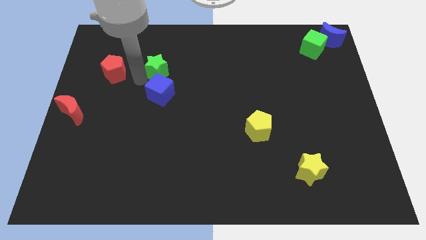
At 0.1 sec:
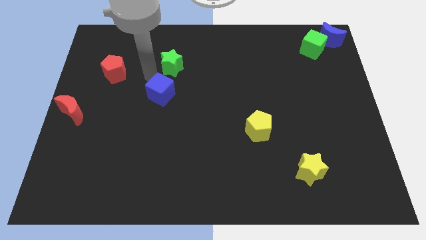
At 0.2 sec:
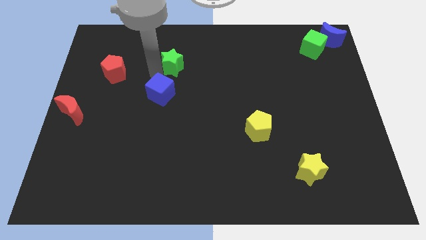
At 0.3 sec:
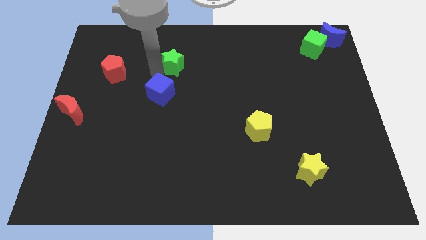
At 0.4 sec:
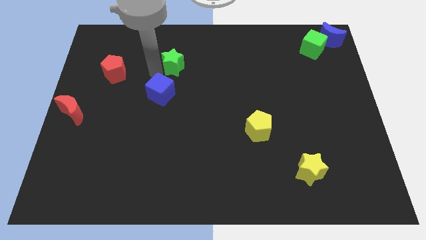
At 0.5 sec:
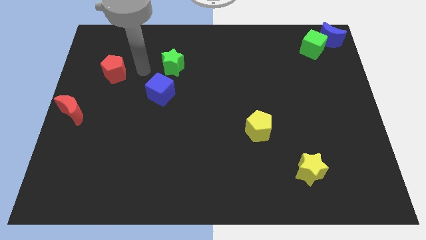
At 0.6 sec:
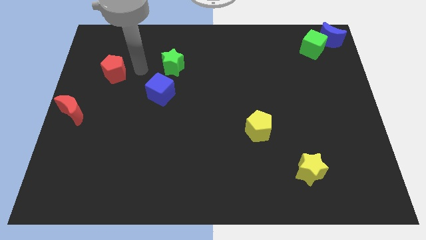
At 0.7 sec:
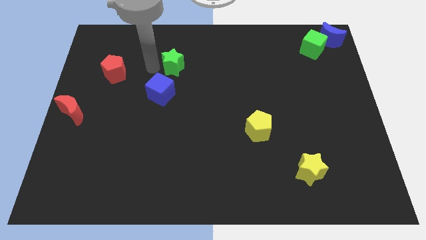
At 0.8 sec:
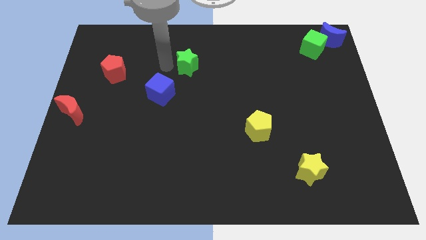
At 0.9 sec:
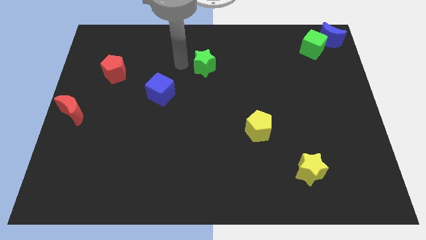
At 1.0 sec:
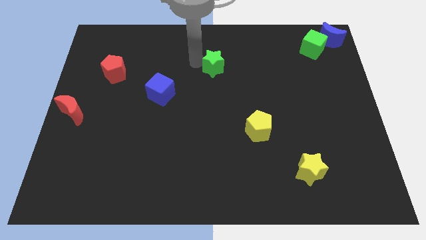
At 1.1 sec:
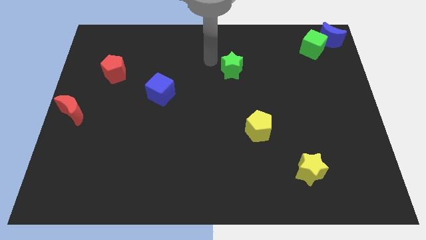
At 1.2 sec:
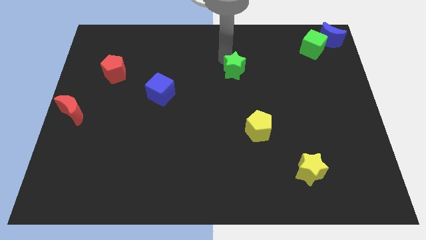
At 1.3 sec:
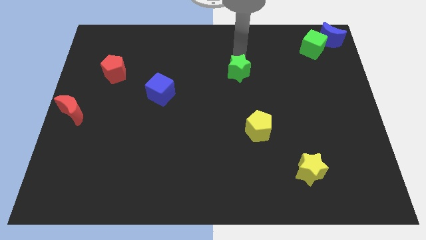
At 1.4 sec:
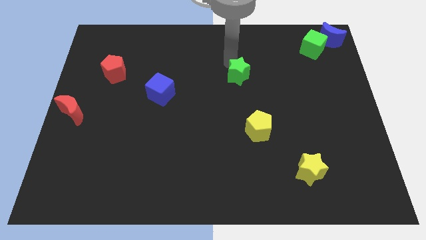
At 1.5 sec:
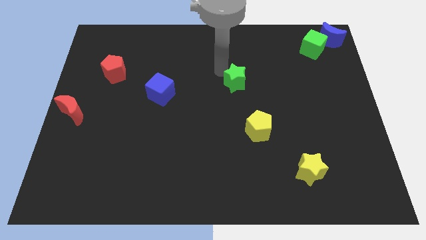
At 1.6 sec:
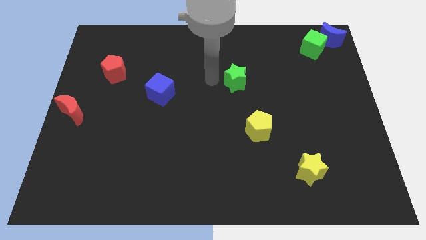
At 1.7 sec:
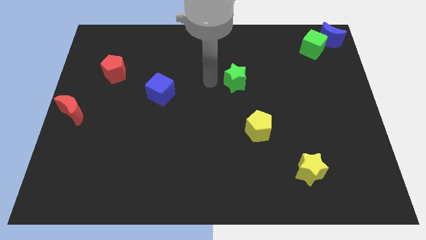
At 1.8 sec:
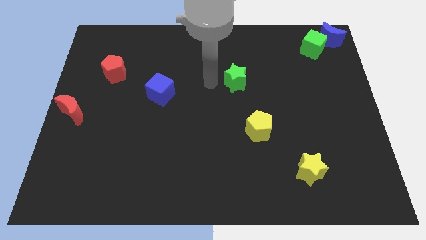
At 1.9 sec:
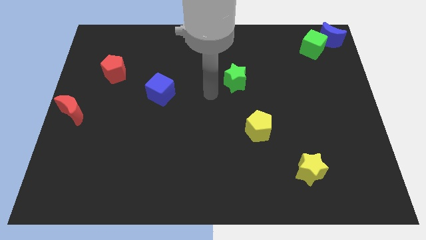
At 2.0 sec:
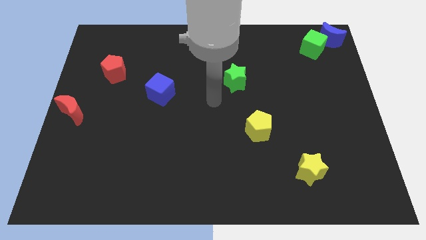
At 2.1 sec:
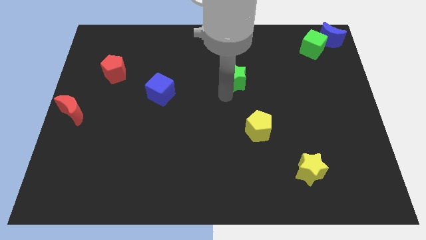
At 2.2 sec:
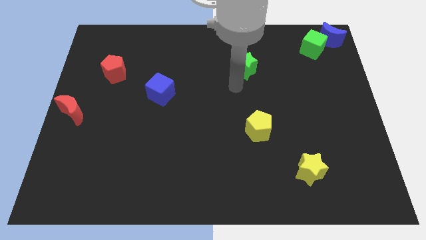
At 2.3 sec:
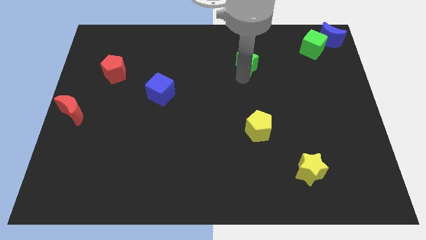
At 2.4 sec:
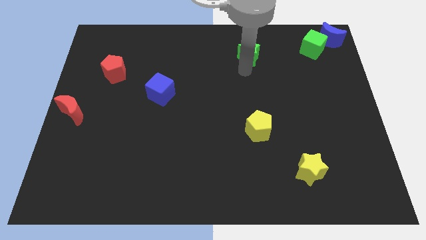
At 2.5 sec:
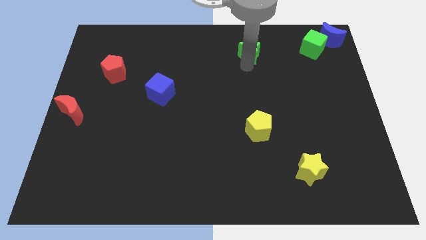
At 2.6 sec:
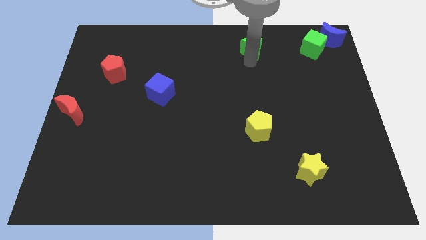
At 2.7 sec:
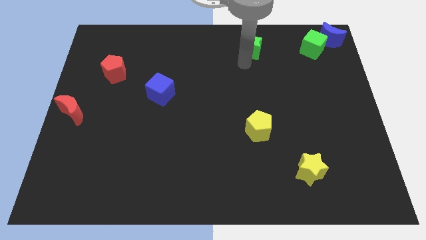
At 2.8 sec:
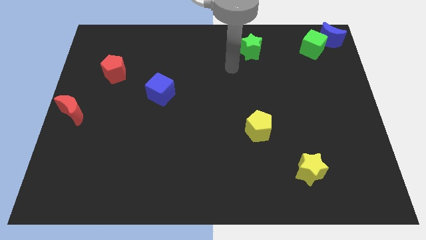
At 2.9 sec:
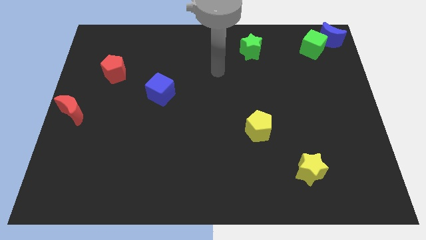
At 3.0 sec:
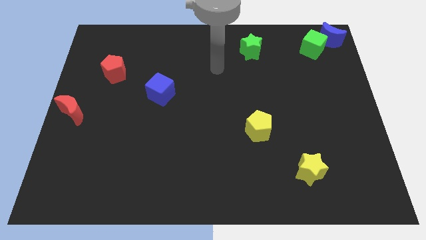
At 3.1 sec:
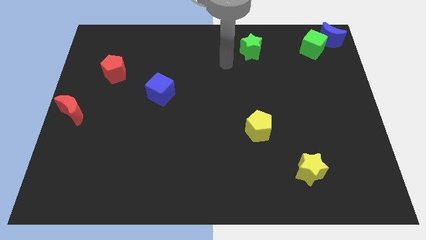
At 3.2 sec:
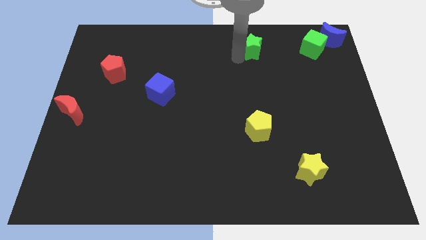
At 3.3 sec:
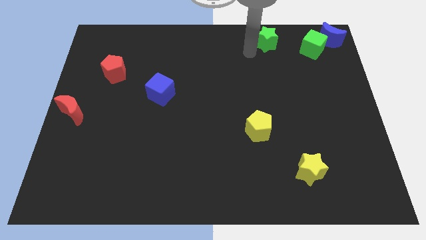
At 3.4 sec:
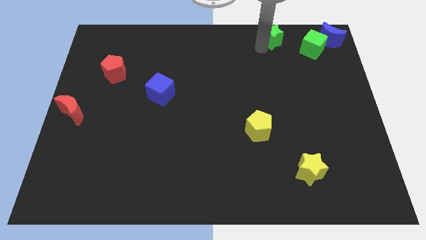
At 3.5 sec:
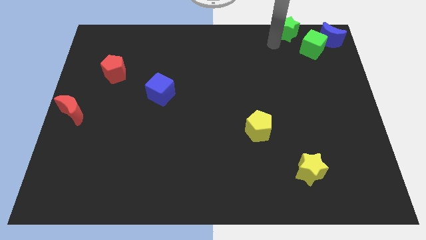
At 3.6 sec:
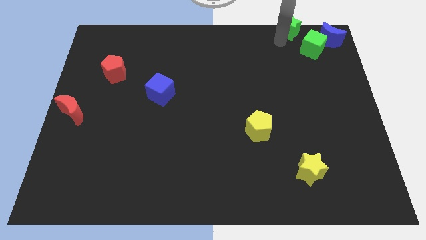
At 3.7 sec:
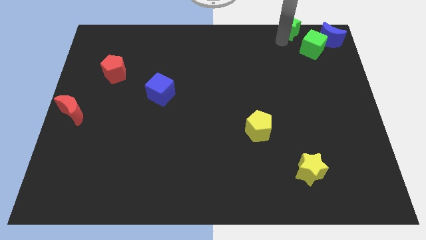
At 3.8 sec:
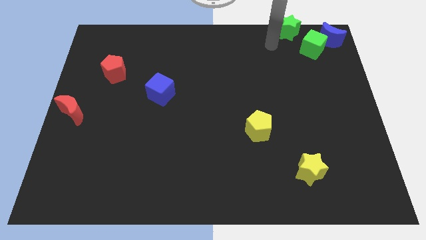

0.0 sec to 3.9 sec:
move the green star away from the blue cube

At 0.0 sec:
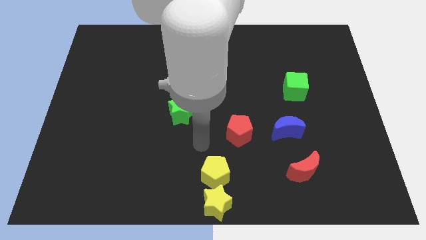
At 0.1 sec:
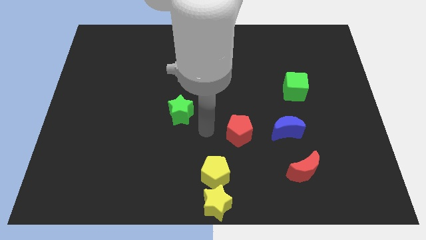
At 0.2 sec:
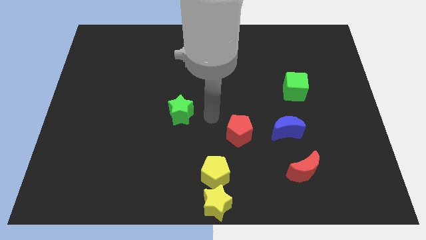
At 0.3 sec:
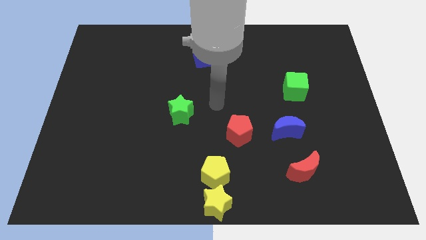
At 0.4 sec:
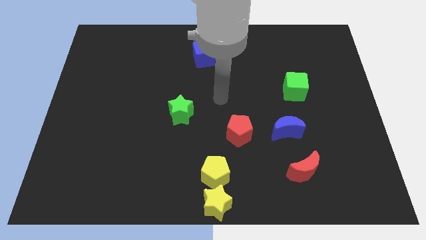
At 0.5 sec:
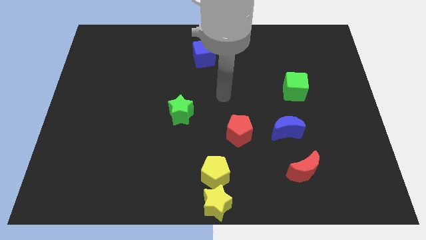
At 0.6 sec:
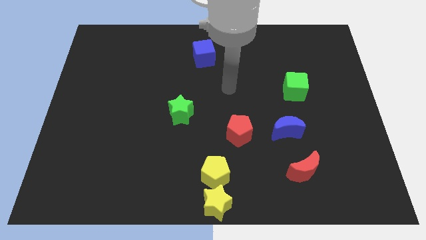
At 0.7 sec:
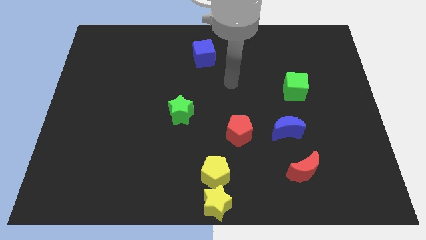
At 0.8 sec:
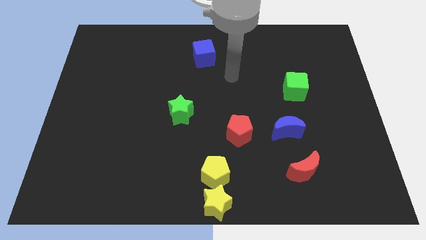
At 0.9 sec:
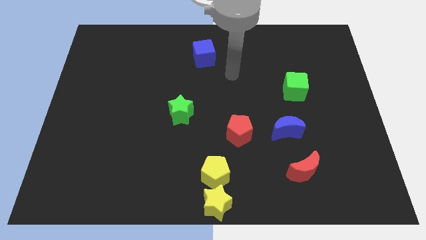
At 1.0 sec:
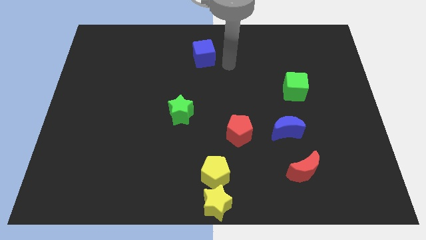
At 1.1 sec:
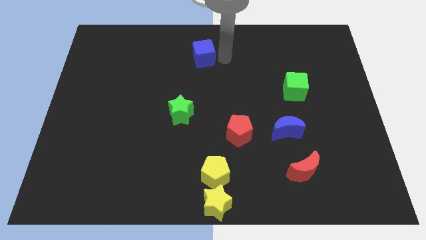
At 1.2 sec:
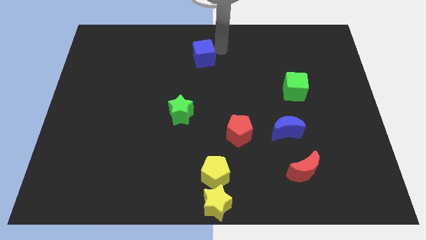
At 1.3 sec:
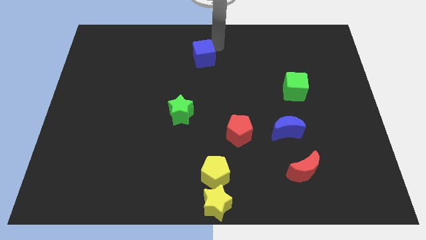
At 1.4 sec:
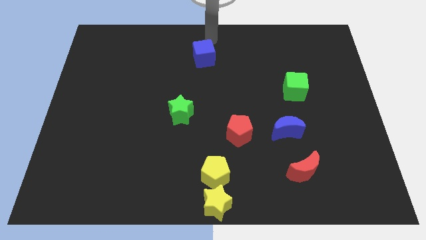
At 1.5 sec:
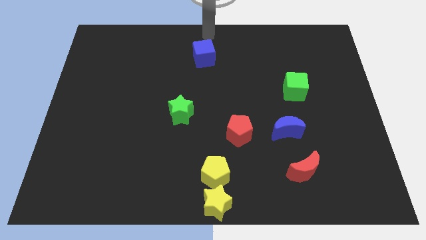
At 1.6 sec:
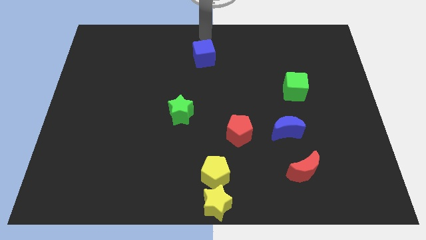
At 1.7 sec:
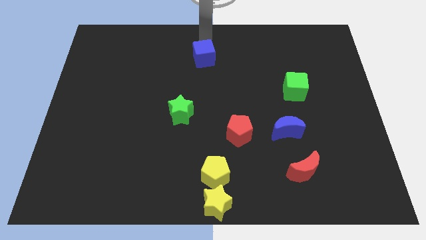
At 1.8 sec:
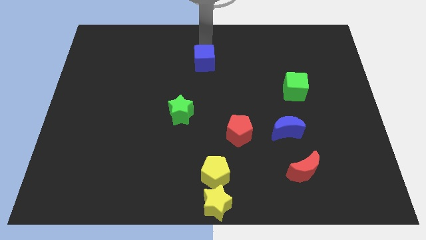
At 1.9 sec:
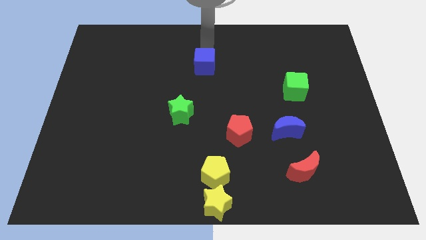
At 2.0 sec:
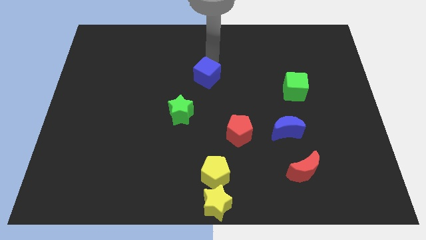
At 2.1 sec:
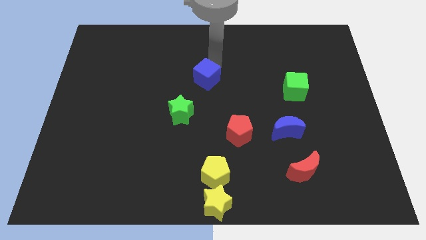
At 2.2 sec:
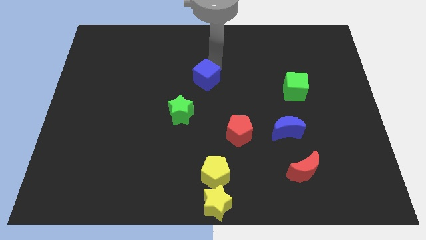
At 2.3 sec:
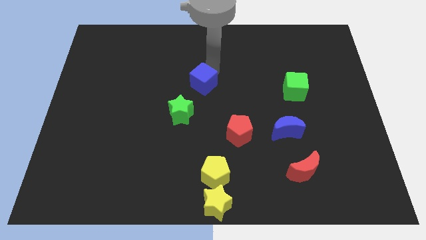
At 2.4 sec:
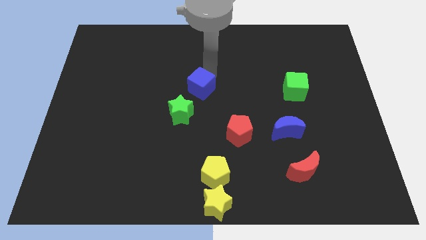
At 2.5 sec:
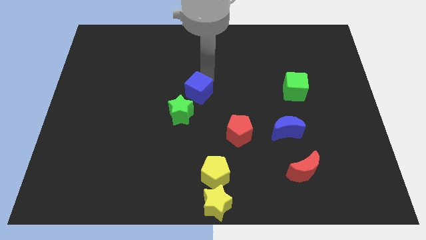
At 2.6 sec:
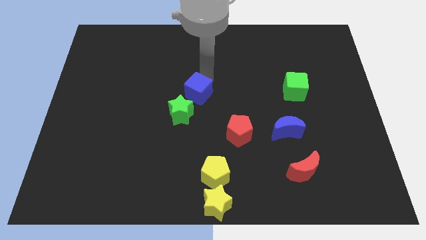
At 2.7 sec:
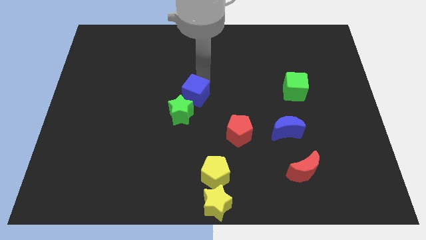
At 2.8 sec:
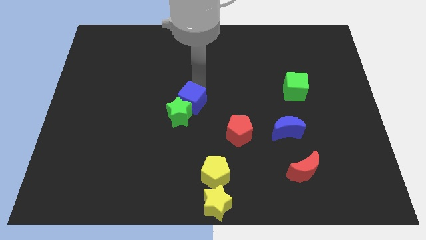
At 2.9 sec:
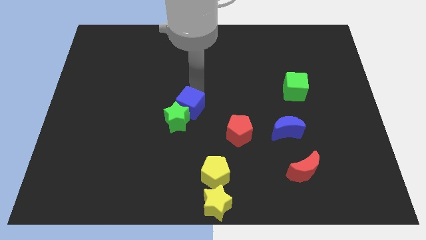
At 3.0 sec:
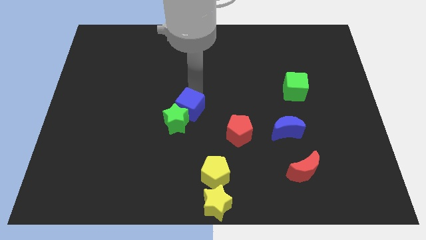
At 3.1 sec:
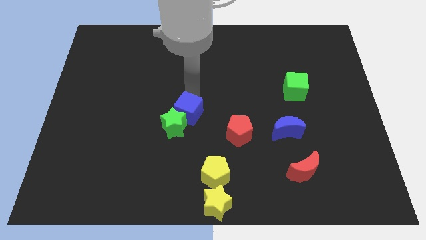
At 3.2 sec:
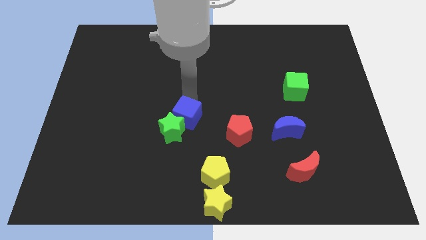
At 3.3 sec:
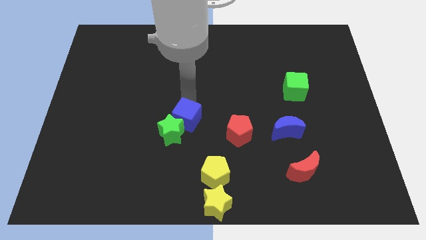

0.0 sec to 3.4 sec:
push the blue cube into the green star

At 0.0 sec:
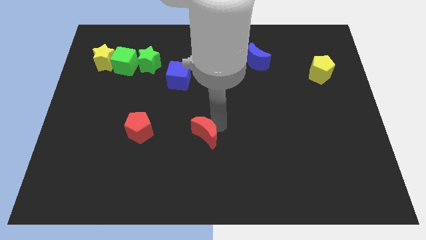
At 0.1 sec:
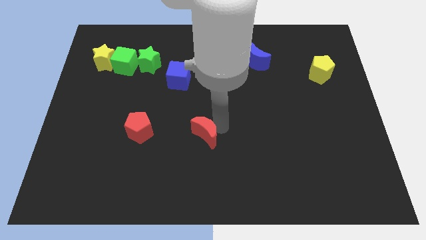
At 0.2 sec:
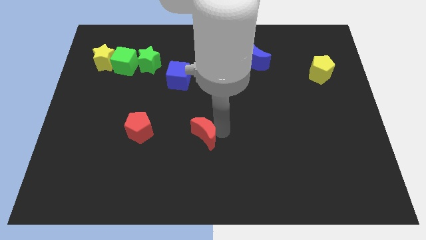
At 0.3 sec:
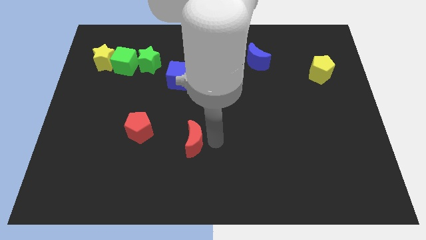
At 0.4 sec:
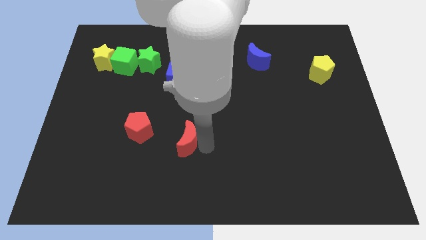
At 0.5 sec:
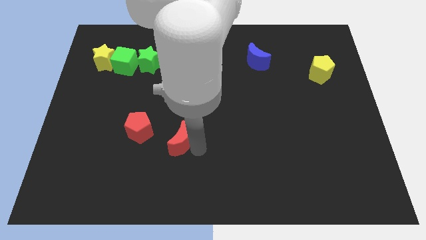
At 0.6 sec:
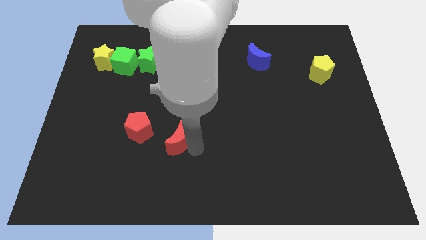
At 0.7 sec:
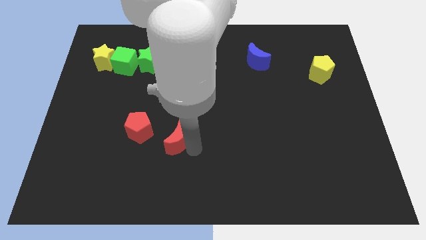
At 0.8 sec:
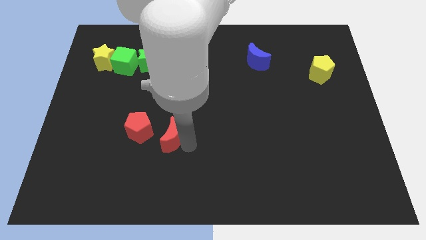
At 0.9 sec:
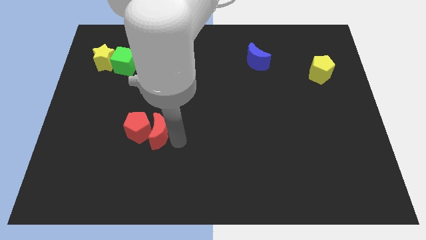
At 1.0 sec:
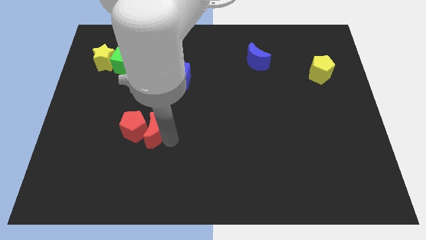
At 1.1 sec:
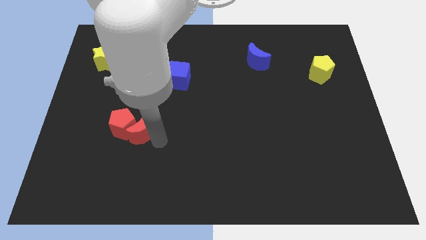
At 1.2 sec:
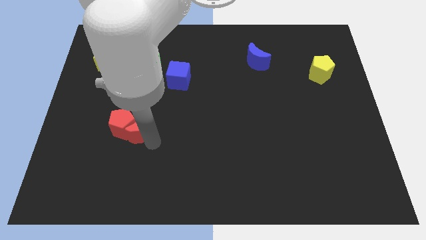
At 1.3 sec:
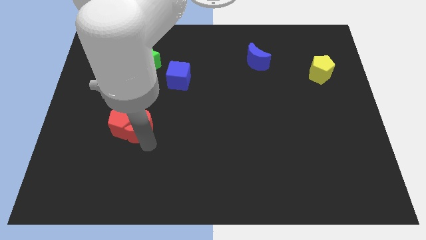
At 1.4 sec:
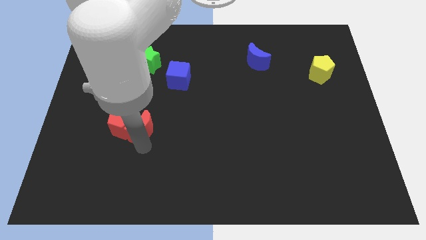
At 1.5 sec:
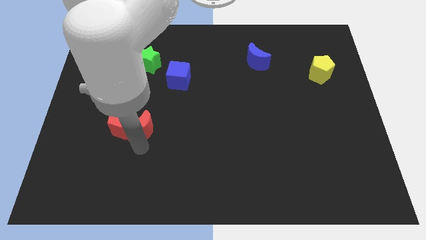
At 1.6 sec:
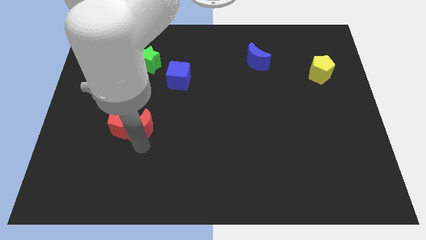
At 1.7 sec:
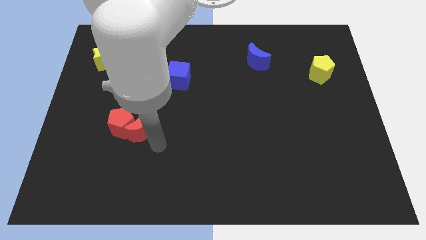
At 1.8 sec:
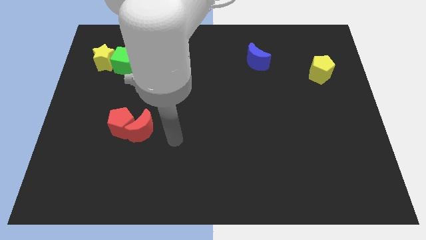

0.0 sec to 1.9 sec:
push the red moon into red pentagon
